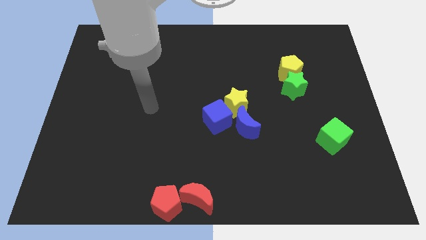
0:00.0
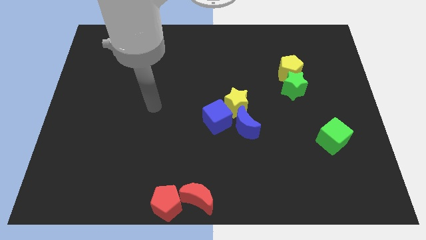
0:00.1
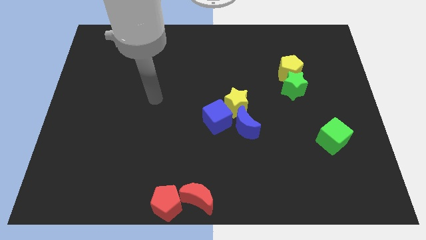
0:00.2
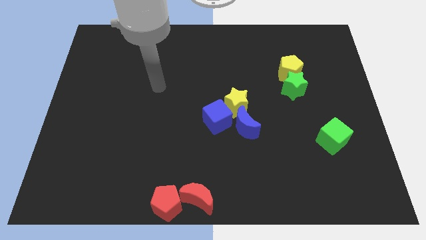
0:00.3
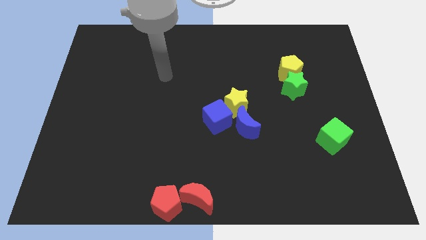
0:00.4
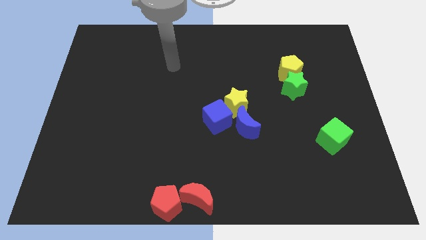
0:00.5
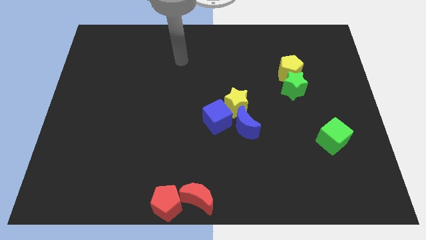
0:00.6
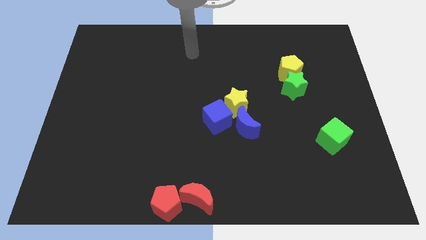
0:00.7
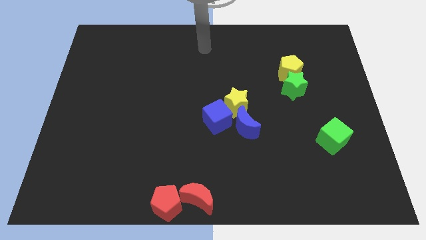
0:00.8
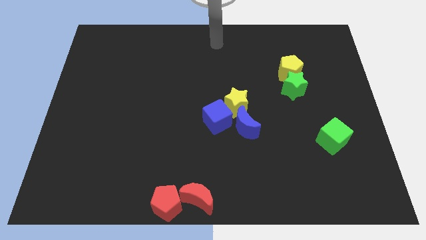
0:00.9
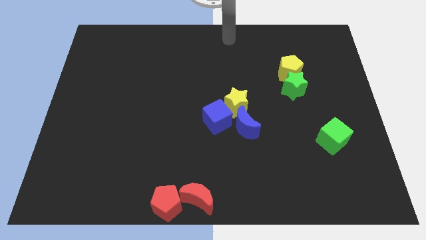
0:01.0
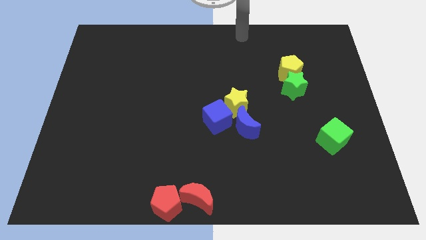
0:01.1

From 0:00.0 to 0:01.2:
move your arm to the top center of the board

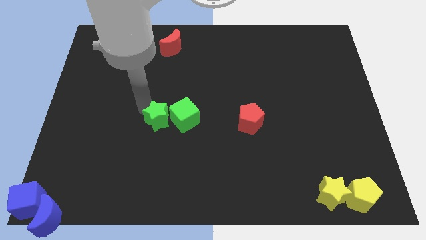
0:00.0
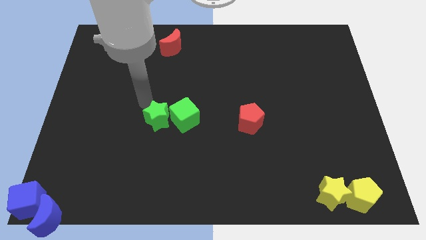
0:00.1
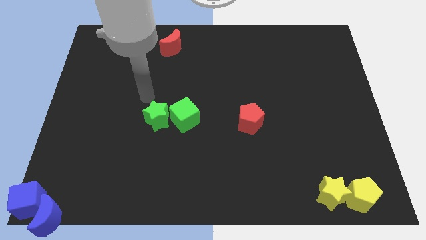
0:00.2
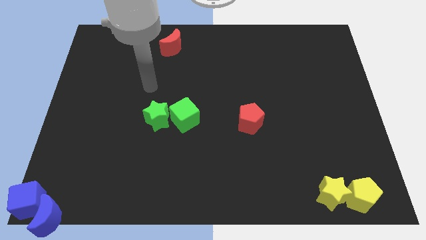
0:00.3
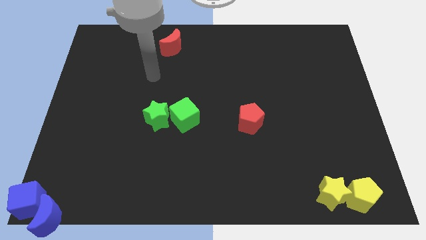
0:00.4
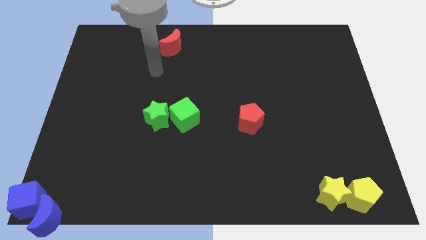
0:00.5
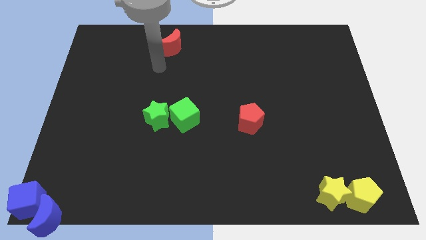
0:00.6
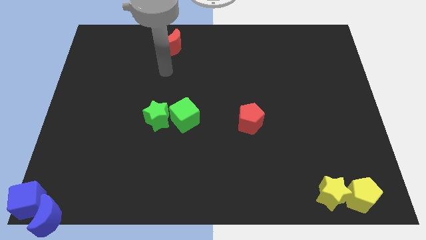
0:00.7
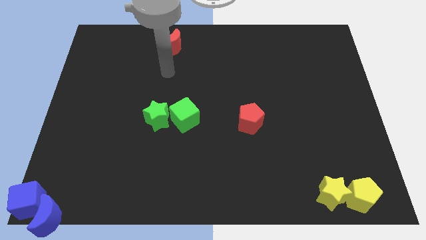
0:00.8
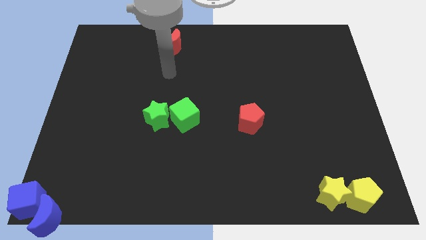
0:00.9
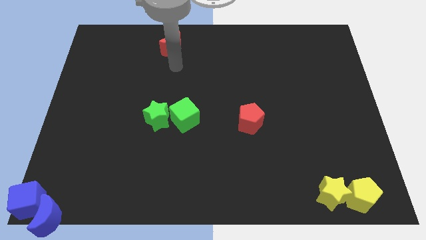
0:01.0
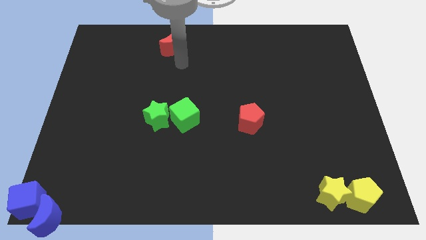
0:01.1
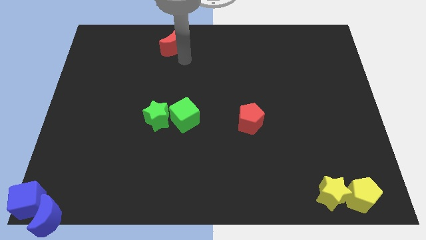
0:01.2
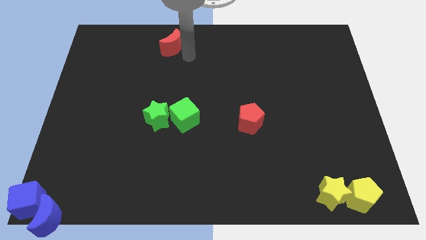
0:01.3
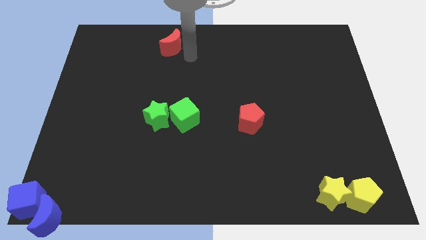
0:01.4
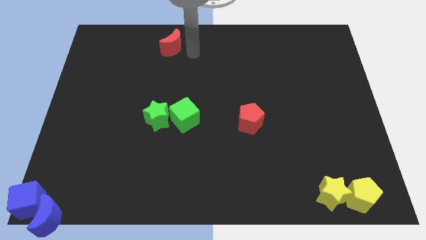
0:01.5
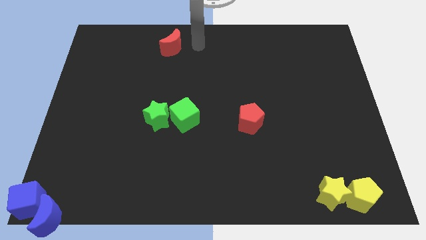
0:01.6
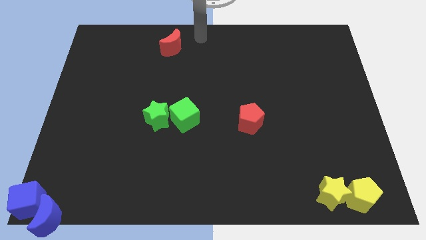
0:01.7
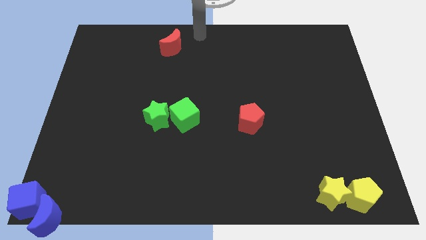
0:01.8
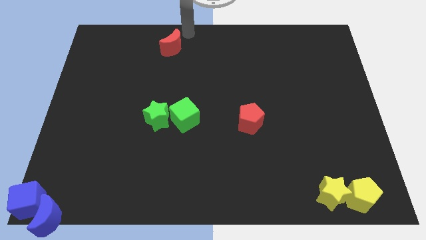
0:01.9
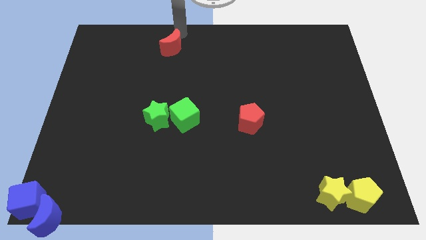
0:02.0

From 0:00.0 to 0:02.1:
move your arm away from the green star

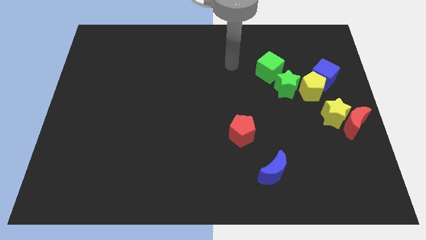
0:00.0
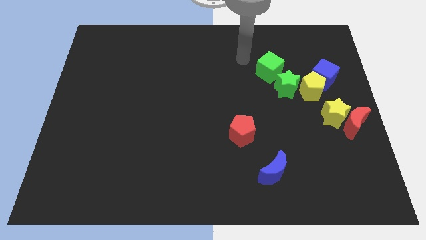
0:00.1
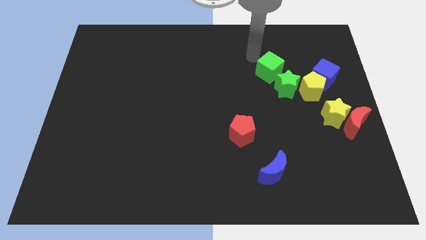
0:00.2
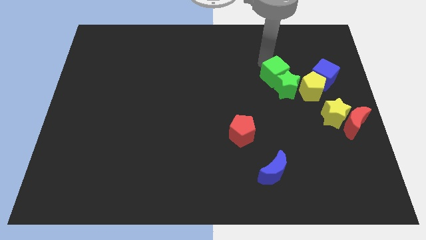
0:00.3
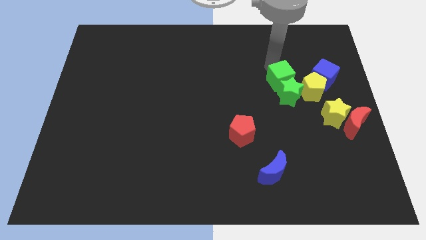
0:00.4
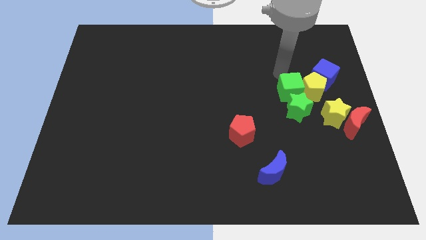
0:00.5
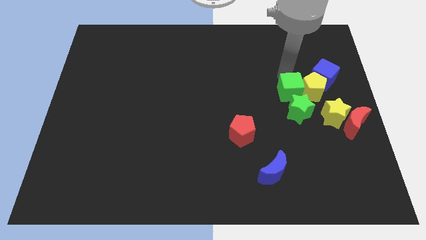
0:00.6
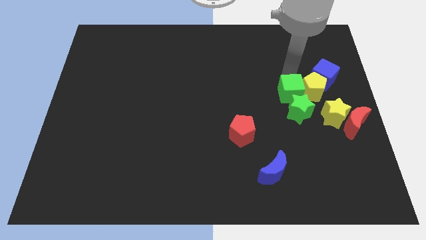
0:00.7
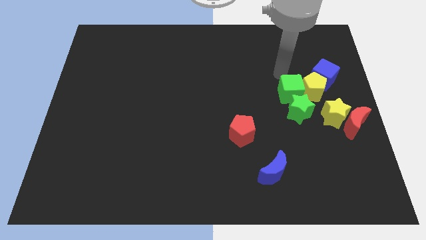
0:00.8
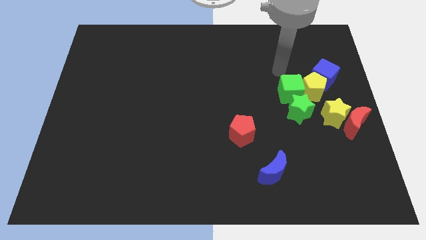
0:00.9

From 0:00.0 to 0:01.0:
push the green cube left to the yellow pentagon

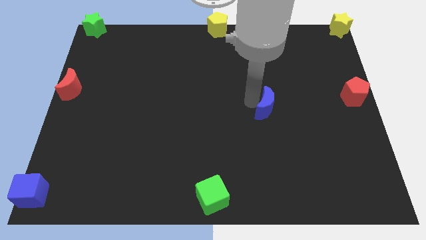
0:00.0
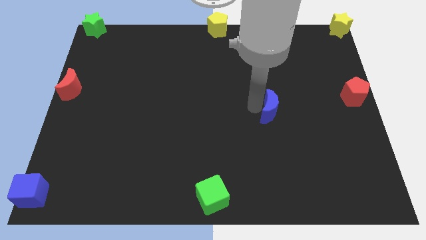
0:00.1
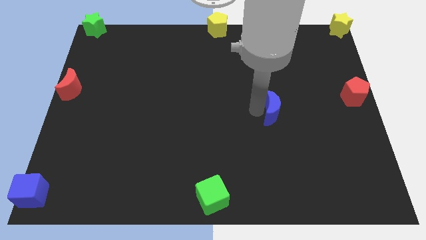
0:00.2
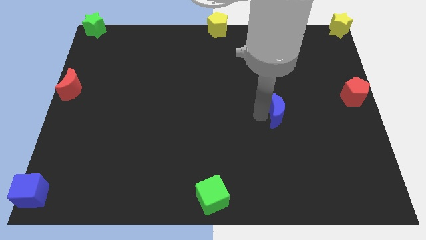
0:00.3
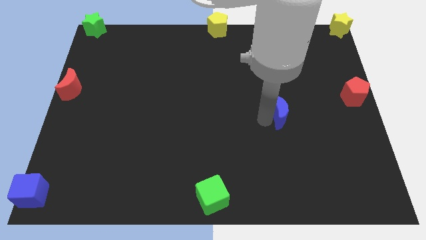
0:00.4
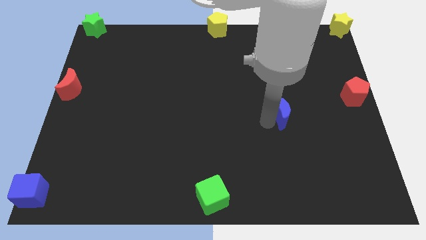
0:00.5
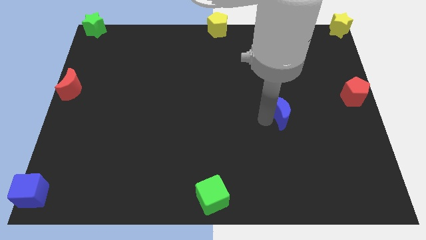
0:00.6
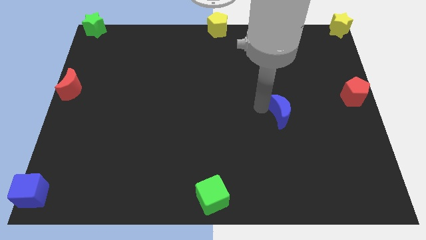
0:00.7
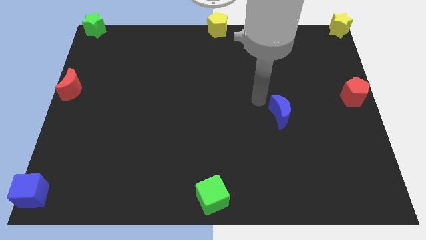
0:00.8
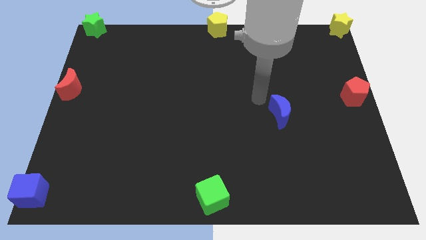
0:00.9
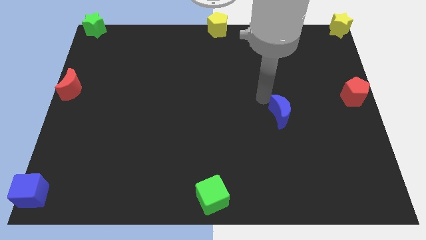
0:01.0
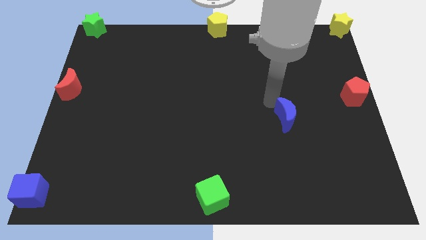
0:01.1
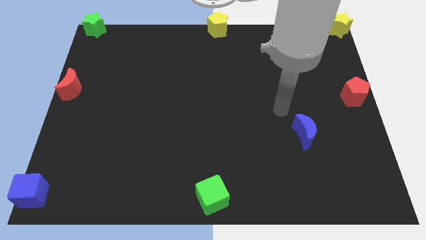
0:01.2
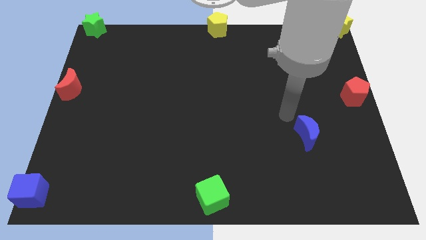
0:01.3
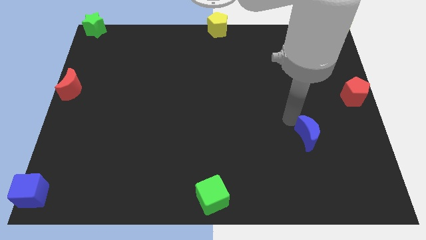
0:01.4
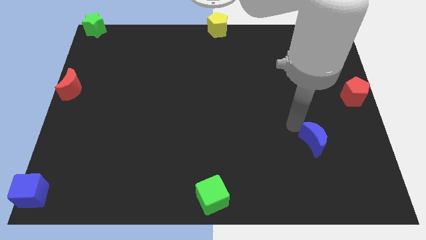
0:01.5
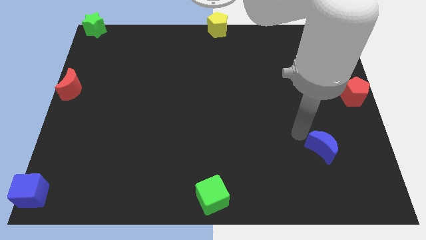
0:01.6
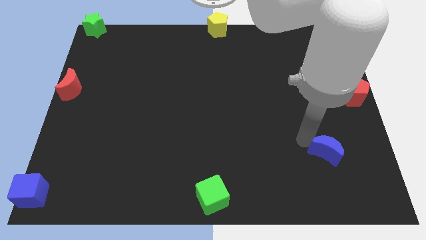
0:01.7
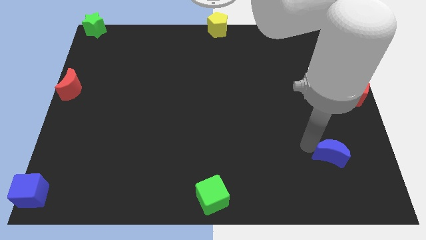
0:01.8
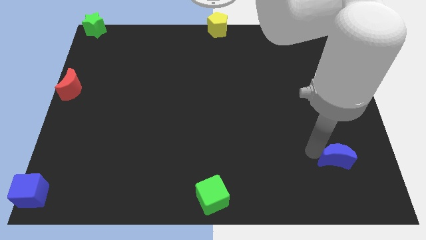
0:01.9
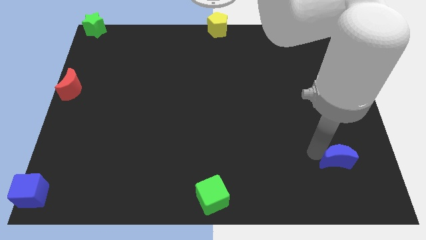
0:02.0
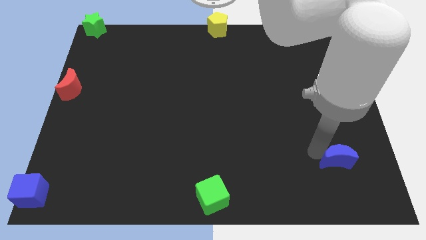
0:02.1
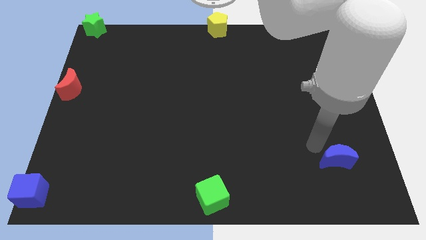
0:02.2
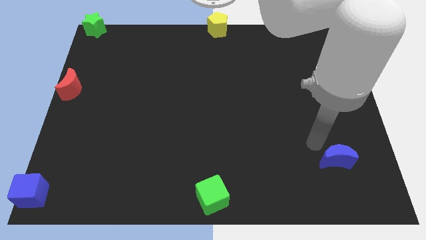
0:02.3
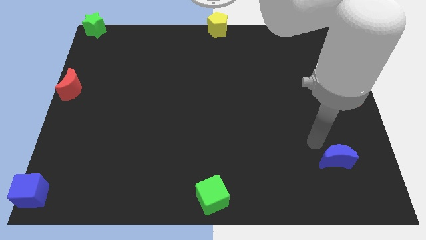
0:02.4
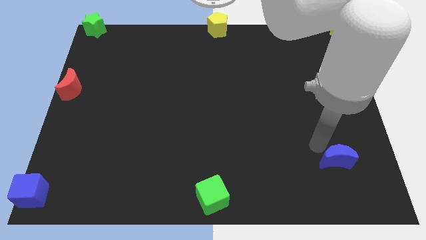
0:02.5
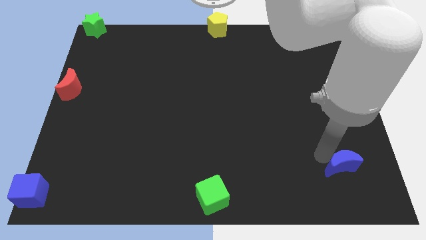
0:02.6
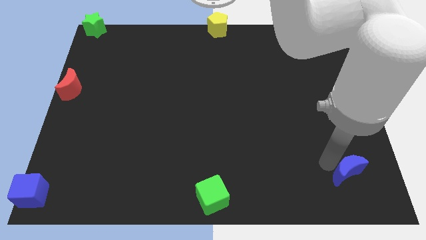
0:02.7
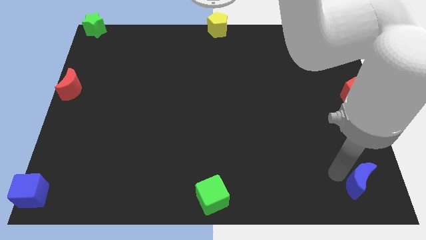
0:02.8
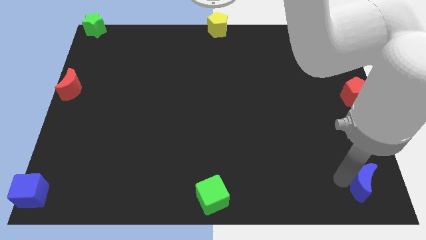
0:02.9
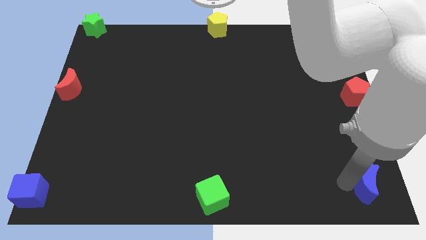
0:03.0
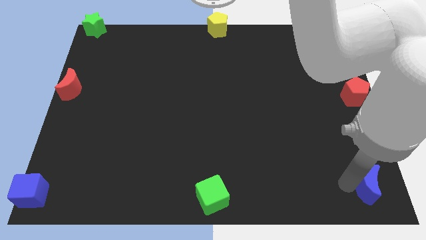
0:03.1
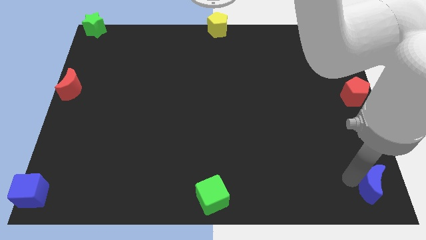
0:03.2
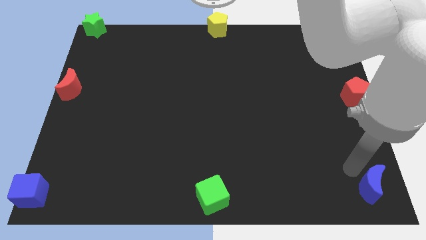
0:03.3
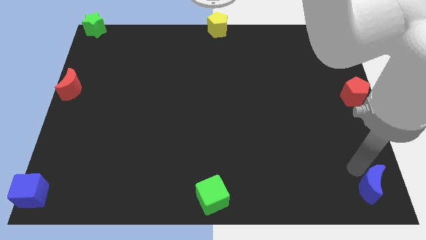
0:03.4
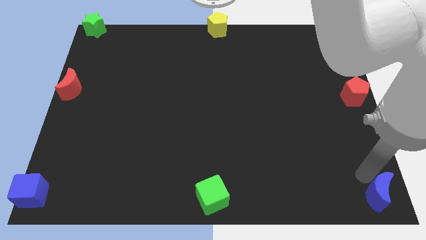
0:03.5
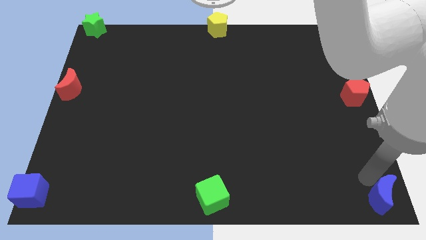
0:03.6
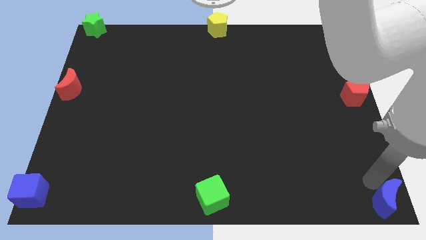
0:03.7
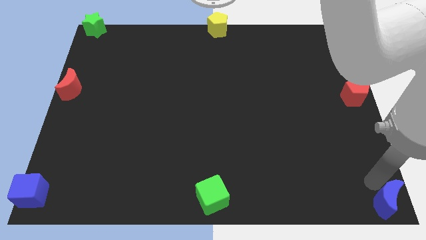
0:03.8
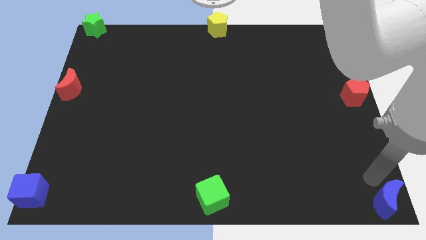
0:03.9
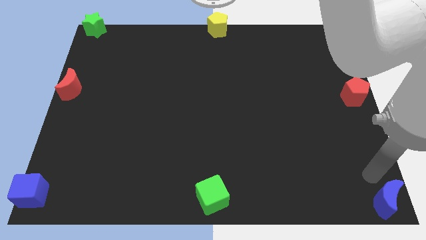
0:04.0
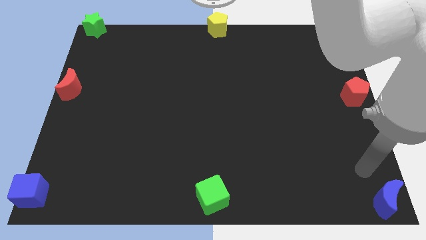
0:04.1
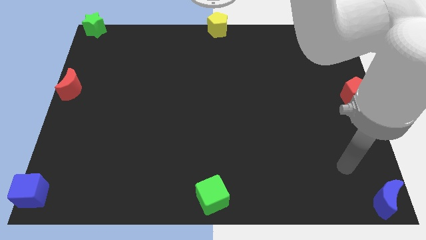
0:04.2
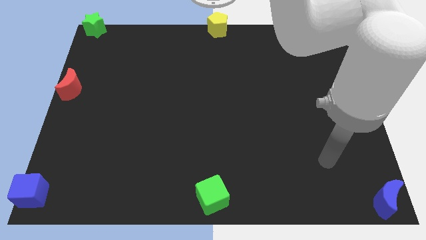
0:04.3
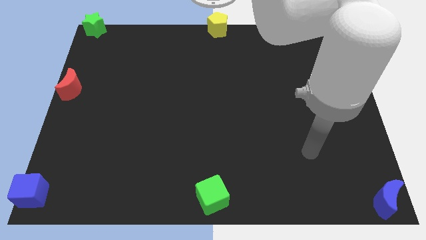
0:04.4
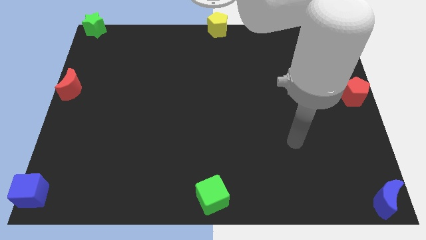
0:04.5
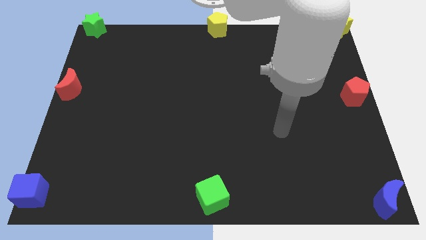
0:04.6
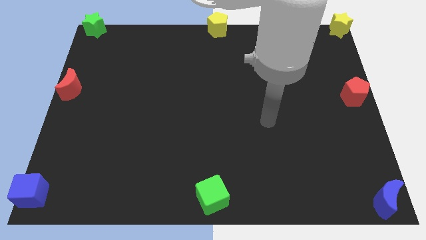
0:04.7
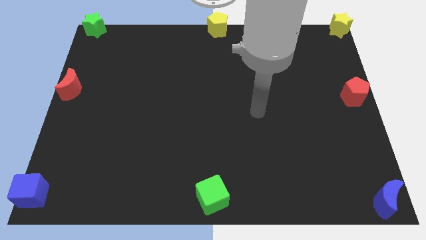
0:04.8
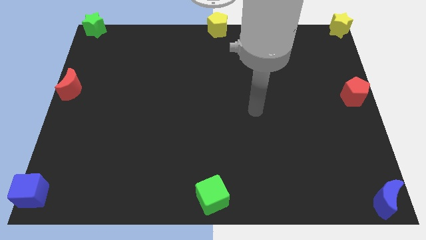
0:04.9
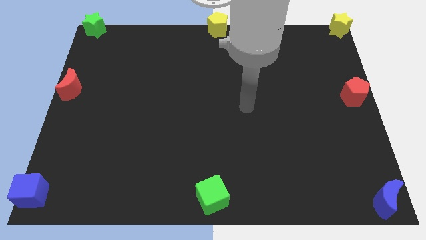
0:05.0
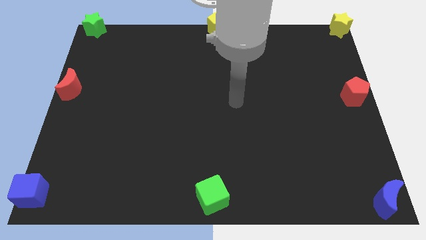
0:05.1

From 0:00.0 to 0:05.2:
move the blue moon to the bottom right of the board
